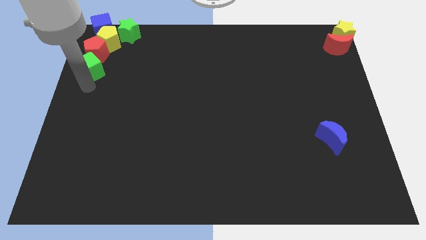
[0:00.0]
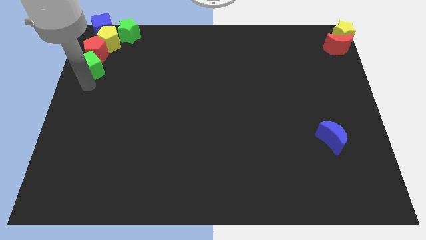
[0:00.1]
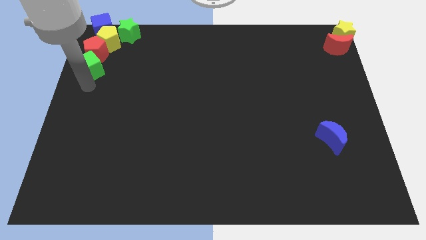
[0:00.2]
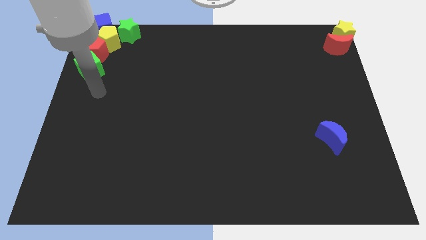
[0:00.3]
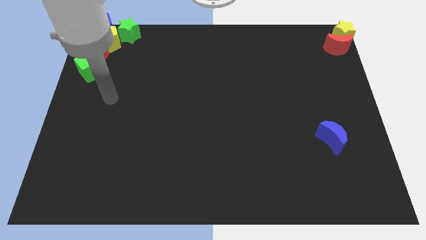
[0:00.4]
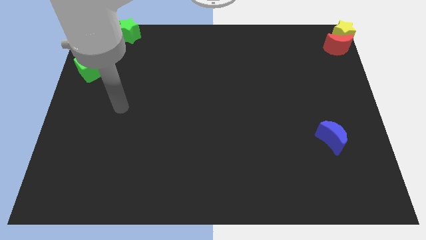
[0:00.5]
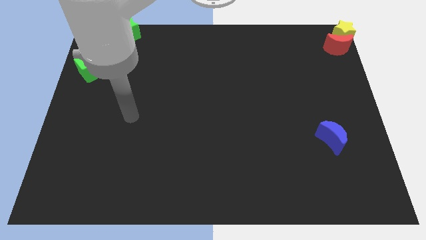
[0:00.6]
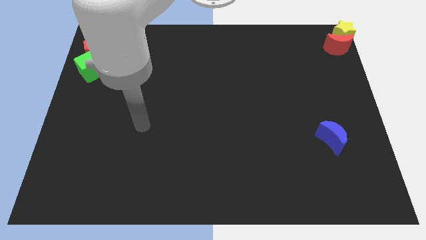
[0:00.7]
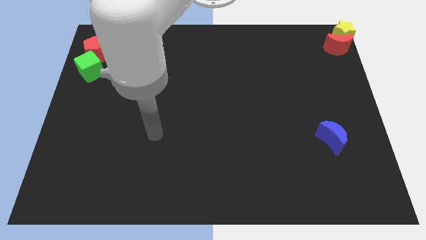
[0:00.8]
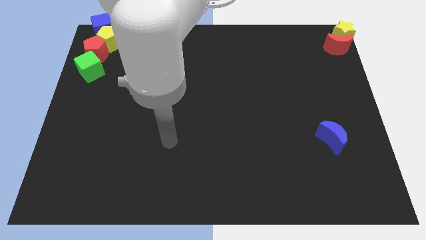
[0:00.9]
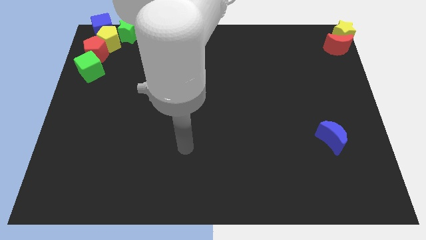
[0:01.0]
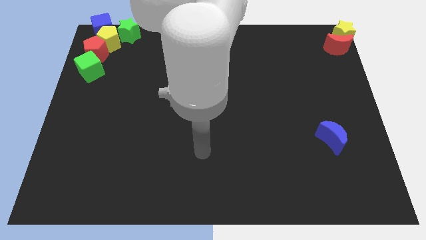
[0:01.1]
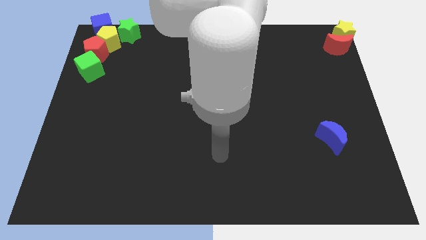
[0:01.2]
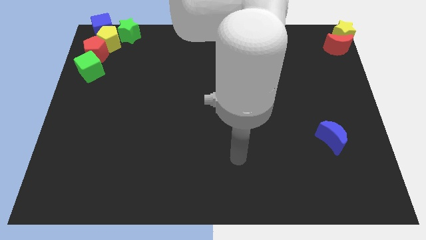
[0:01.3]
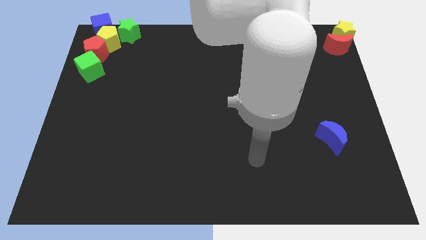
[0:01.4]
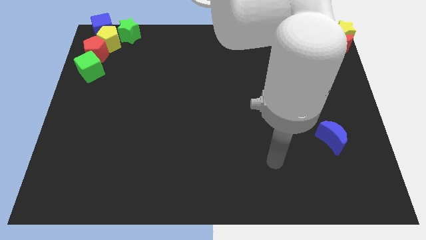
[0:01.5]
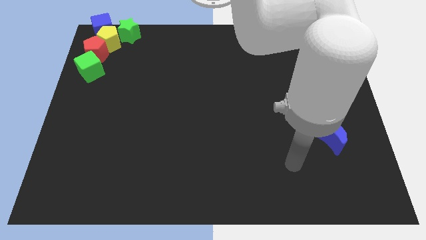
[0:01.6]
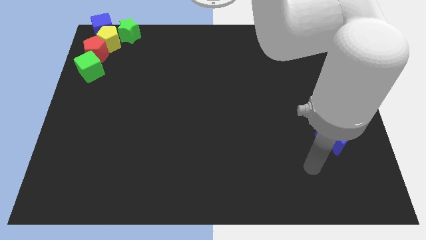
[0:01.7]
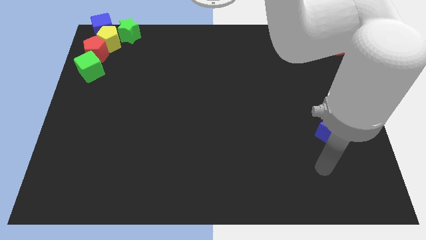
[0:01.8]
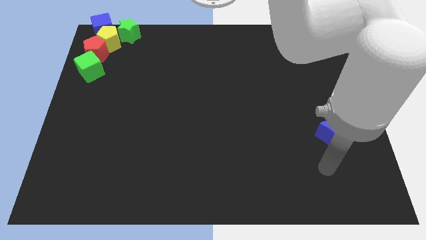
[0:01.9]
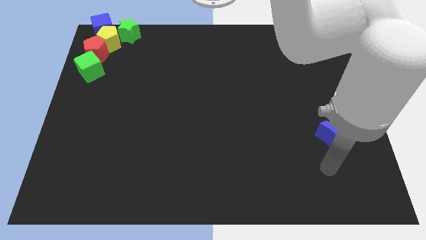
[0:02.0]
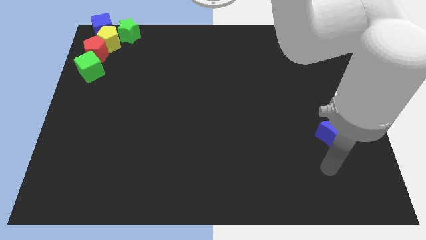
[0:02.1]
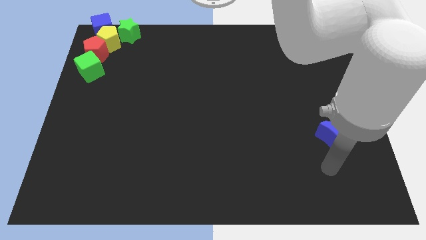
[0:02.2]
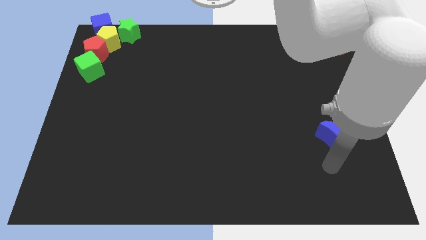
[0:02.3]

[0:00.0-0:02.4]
move the arm away from the green cube

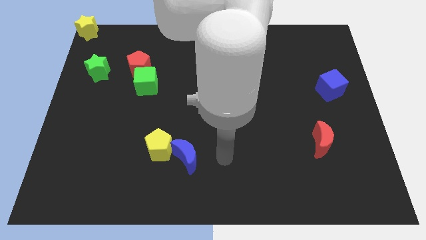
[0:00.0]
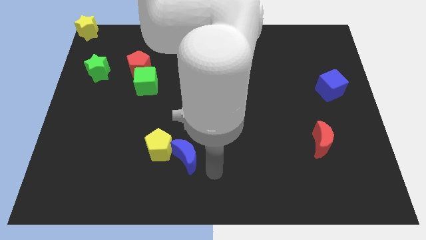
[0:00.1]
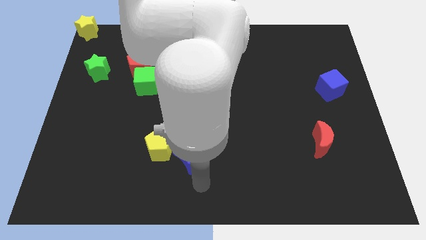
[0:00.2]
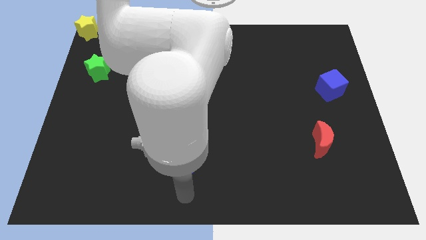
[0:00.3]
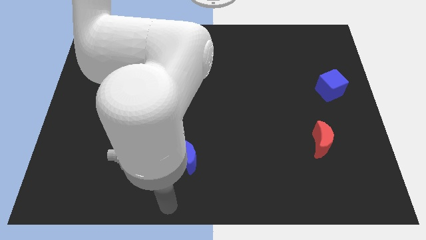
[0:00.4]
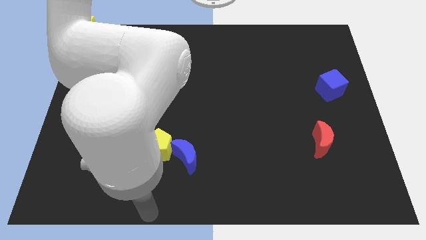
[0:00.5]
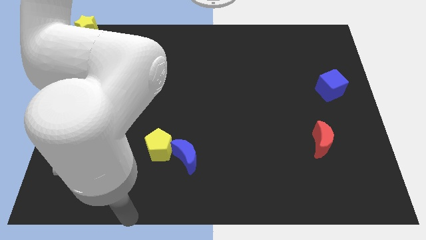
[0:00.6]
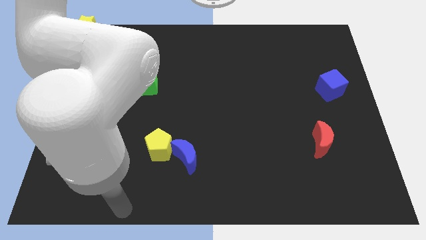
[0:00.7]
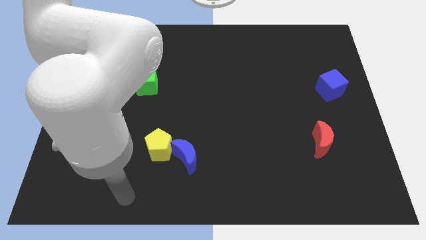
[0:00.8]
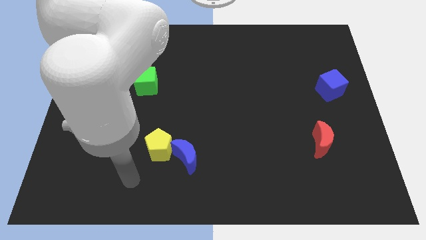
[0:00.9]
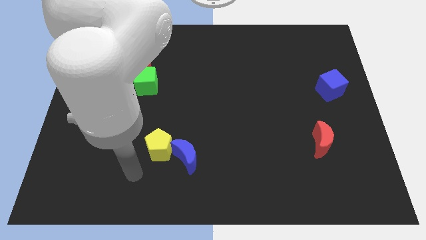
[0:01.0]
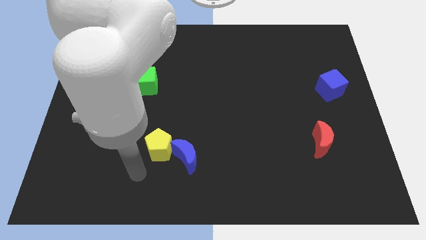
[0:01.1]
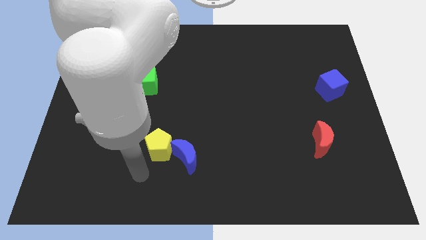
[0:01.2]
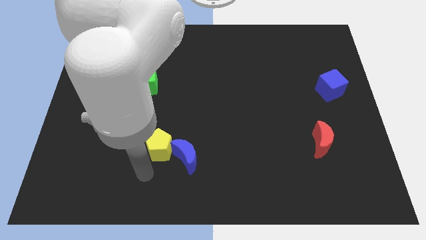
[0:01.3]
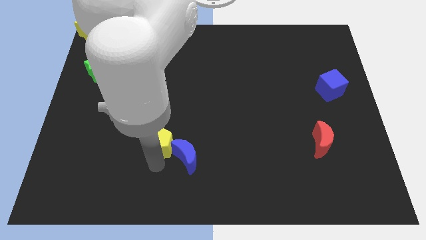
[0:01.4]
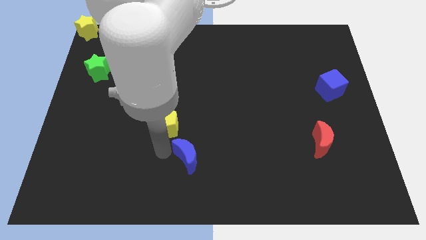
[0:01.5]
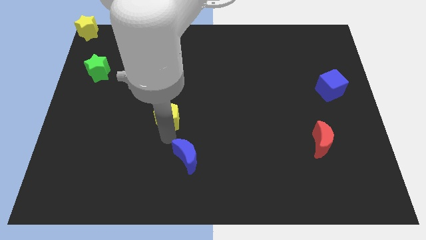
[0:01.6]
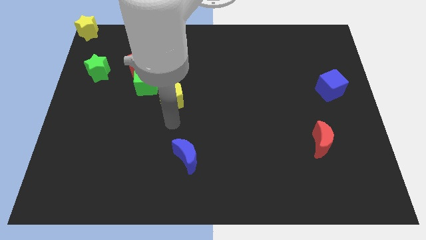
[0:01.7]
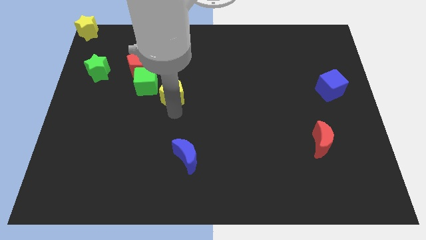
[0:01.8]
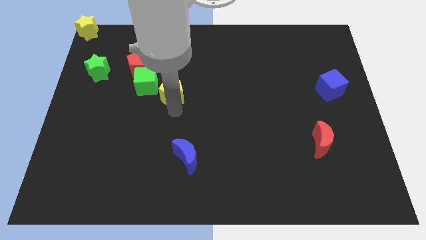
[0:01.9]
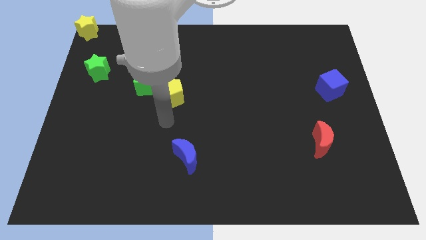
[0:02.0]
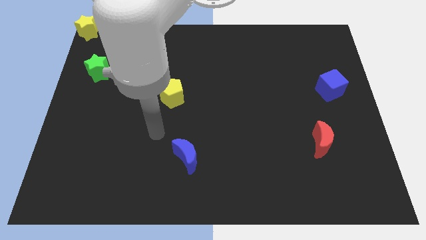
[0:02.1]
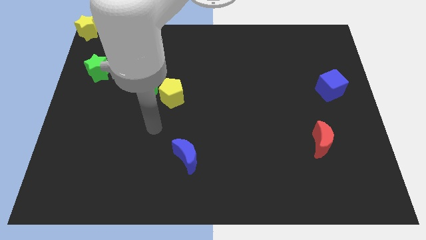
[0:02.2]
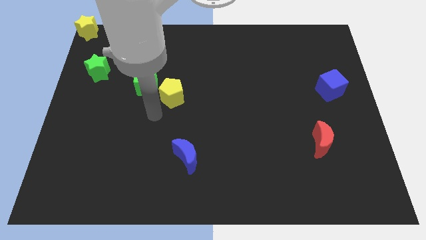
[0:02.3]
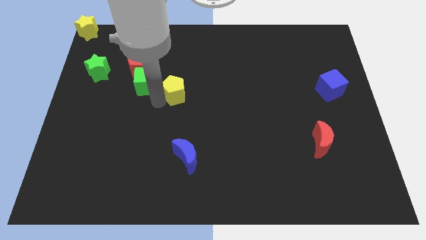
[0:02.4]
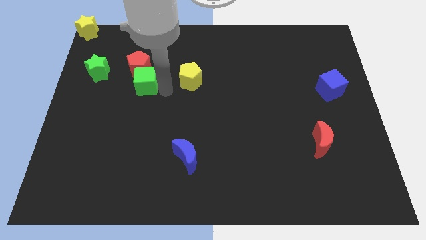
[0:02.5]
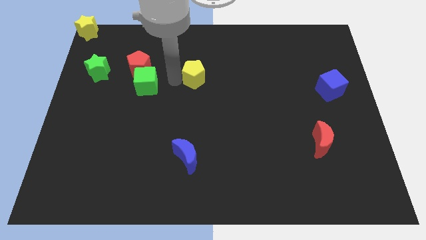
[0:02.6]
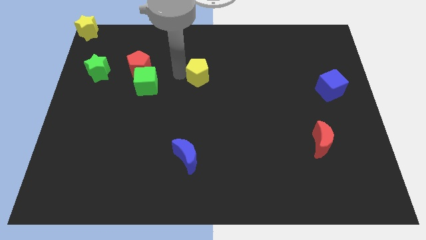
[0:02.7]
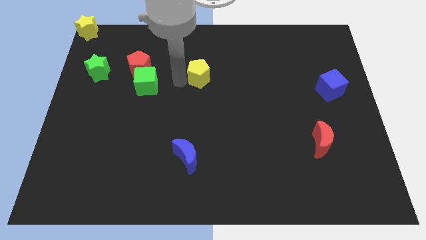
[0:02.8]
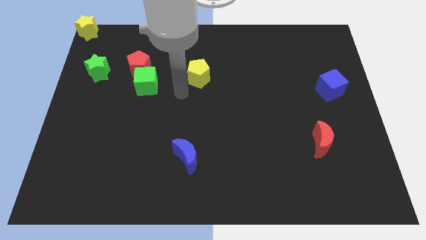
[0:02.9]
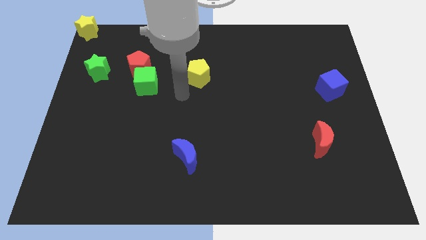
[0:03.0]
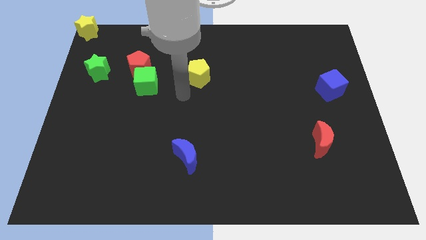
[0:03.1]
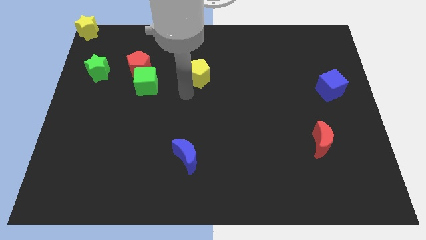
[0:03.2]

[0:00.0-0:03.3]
separate the yellow pentagon from the blue crescent

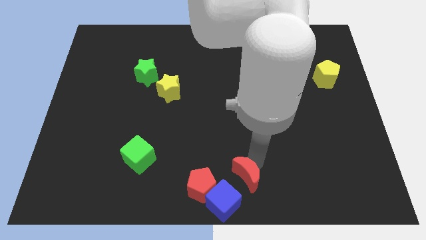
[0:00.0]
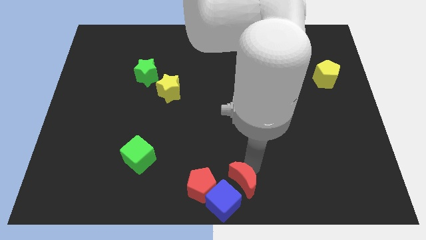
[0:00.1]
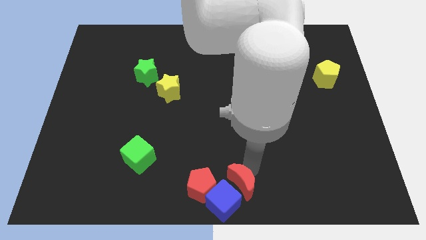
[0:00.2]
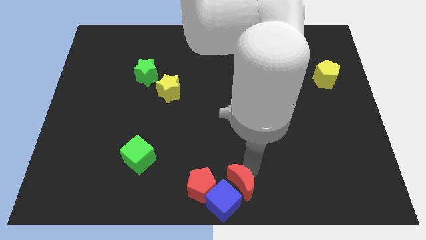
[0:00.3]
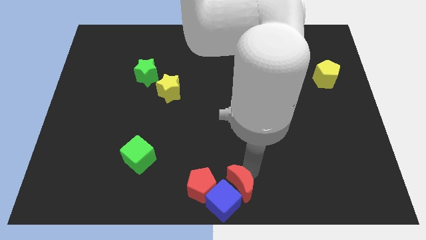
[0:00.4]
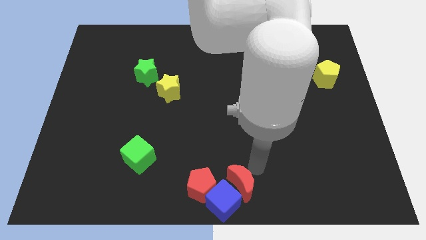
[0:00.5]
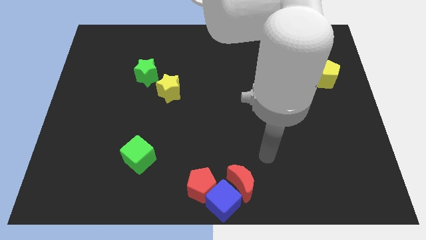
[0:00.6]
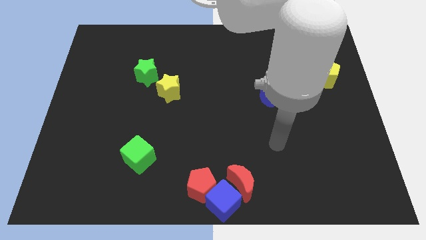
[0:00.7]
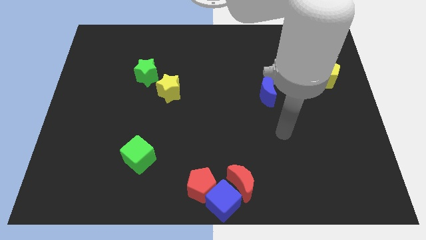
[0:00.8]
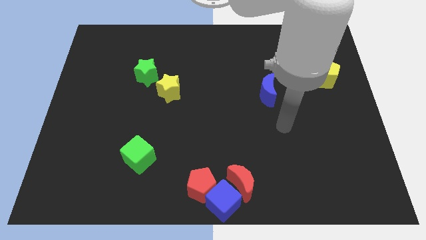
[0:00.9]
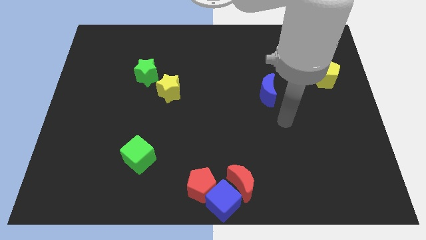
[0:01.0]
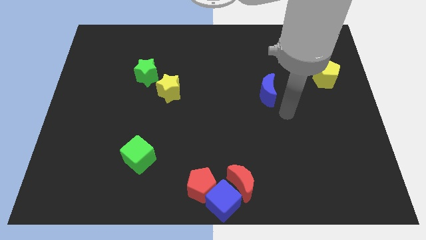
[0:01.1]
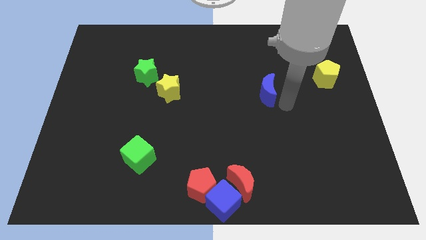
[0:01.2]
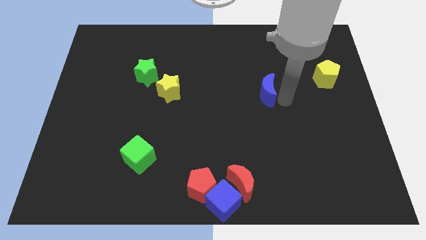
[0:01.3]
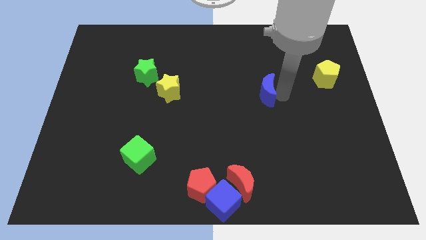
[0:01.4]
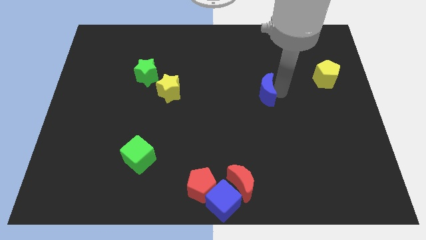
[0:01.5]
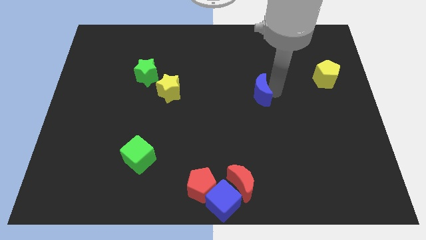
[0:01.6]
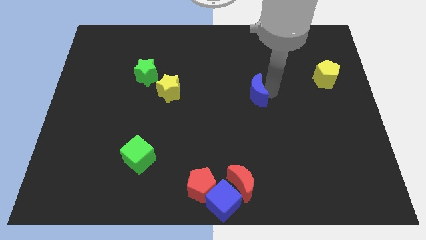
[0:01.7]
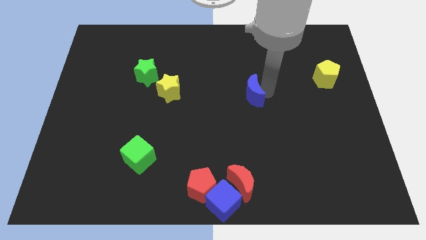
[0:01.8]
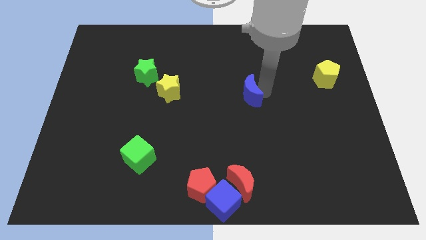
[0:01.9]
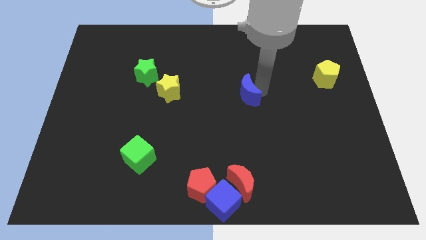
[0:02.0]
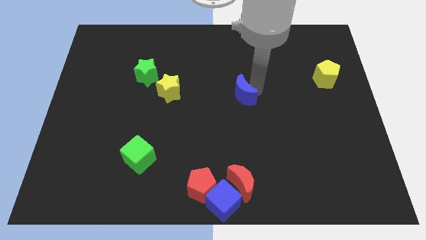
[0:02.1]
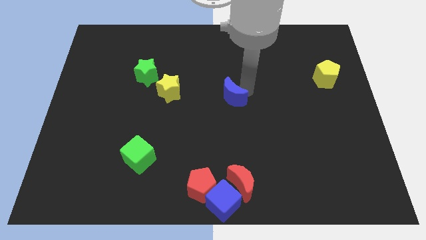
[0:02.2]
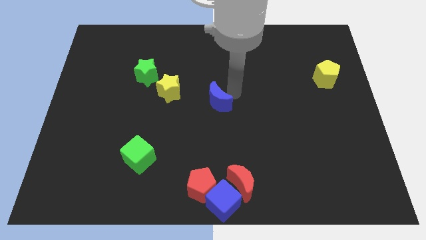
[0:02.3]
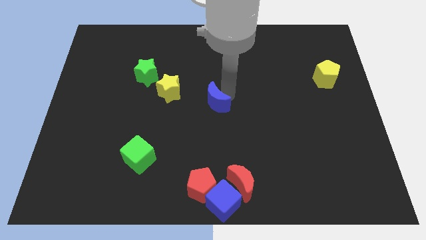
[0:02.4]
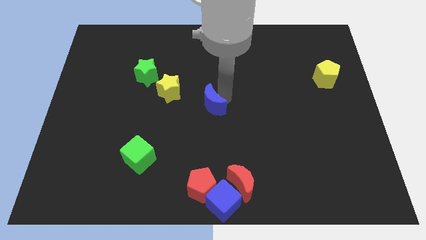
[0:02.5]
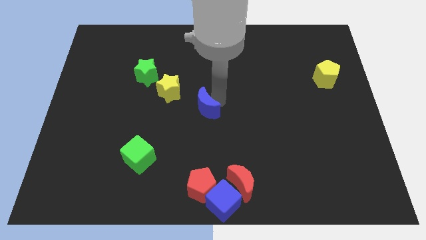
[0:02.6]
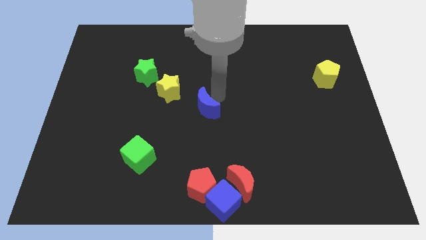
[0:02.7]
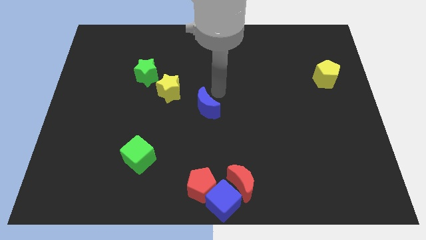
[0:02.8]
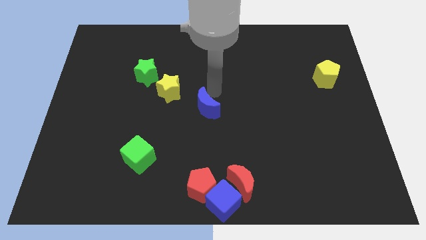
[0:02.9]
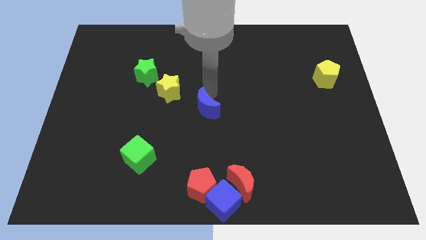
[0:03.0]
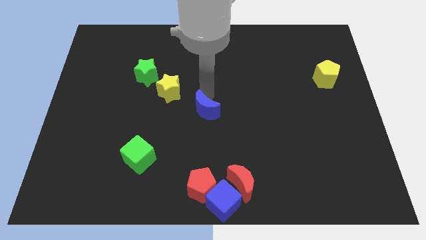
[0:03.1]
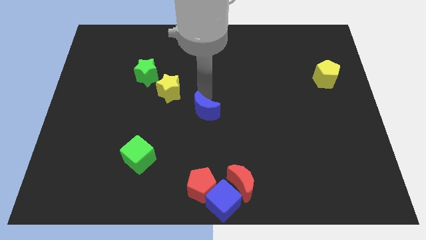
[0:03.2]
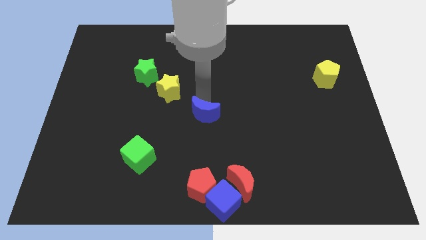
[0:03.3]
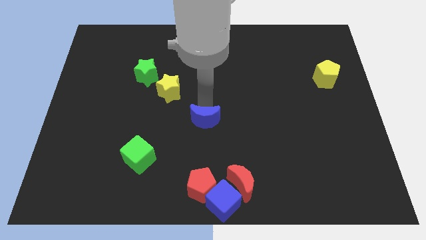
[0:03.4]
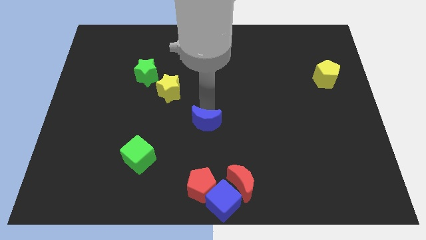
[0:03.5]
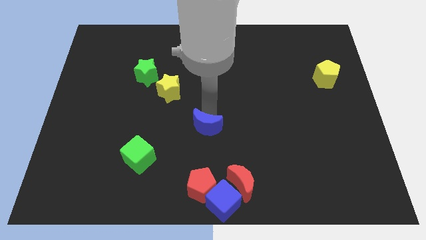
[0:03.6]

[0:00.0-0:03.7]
move the blue moon towards the bottom
